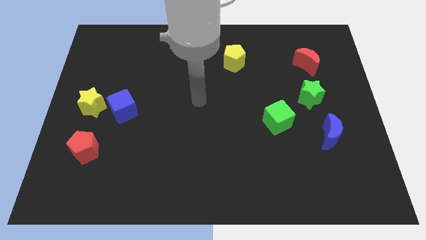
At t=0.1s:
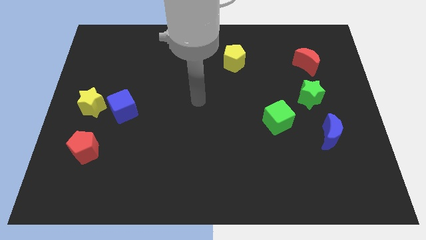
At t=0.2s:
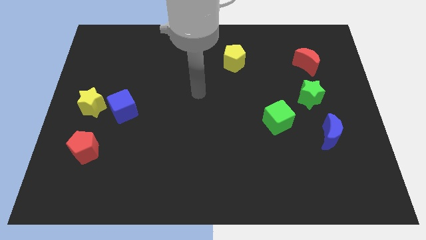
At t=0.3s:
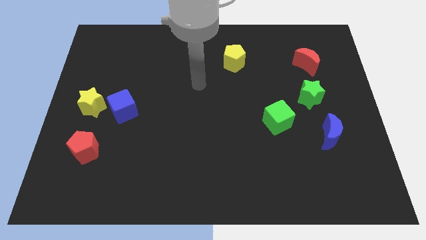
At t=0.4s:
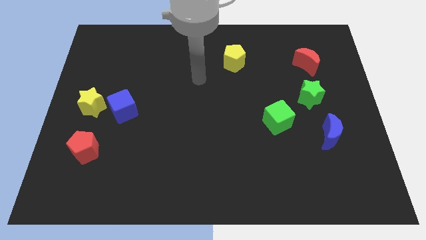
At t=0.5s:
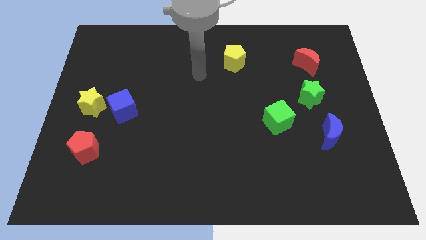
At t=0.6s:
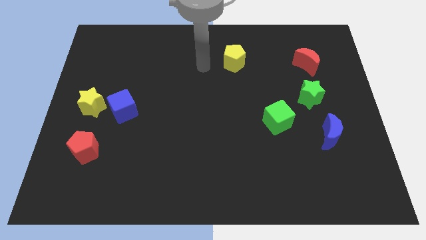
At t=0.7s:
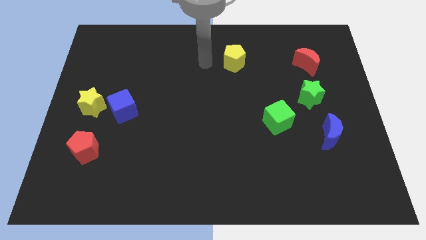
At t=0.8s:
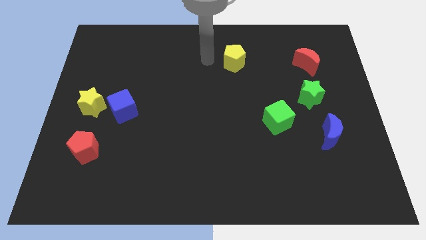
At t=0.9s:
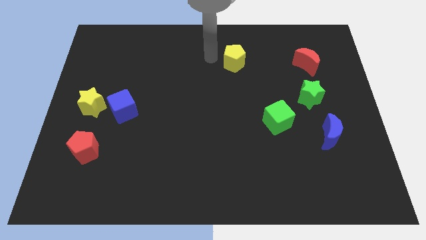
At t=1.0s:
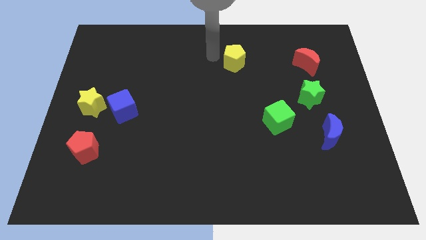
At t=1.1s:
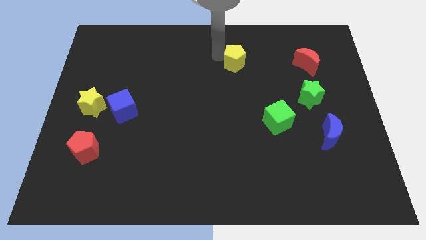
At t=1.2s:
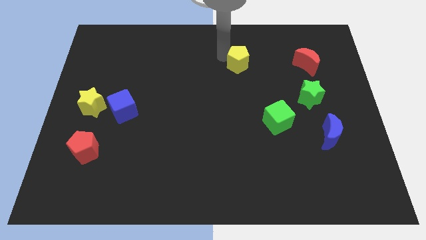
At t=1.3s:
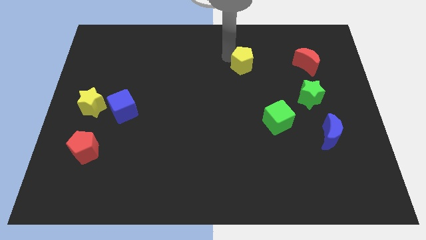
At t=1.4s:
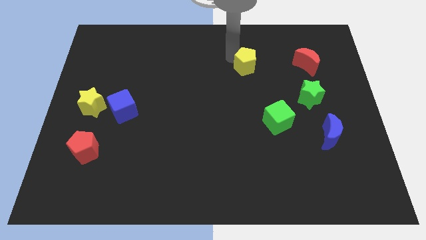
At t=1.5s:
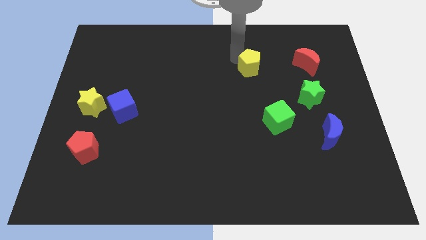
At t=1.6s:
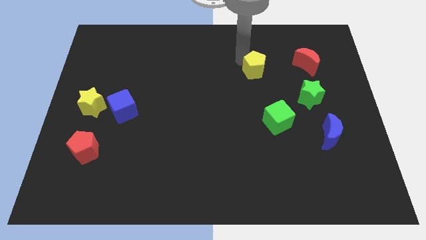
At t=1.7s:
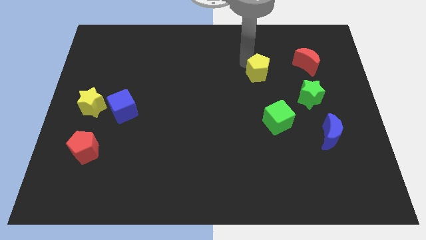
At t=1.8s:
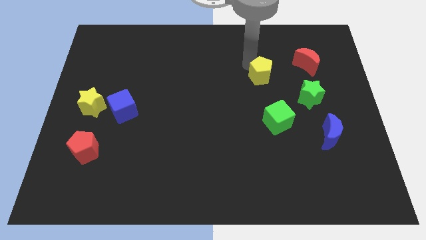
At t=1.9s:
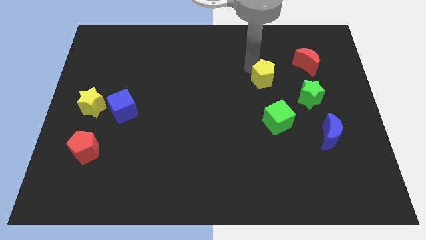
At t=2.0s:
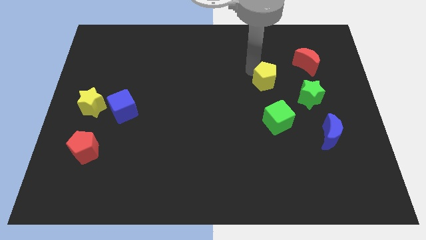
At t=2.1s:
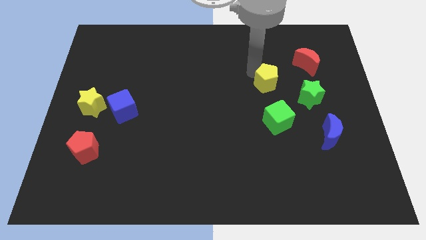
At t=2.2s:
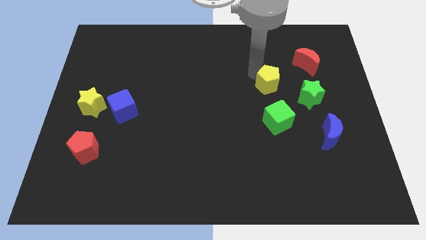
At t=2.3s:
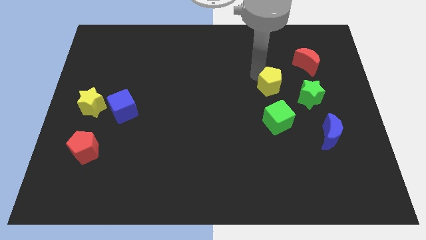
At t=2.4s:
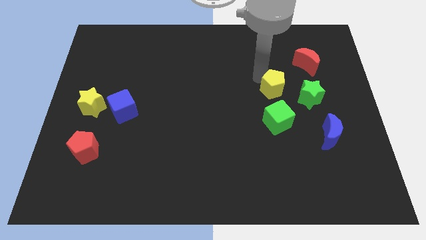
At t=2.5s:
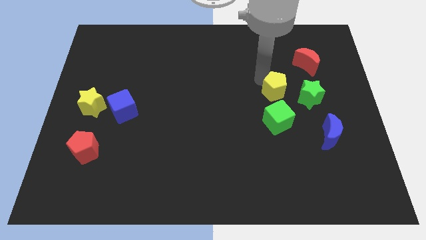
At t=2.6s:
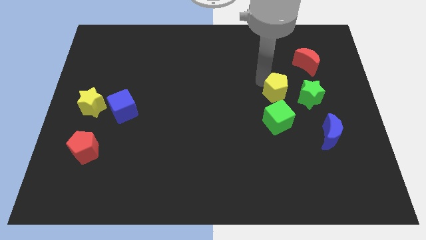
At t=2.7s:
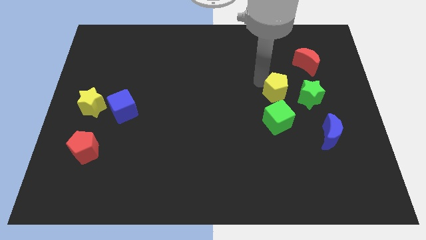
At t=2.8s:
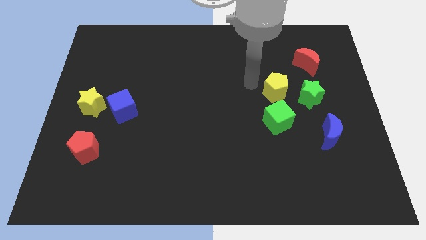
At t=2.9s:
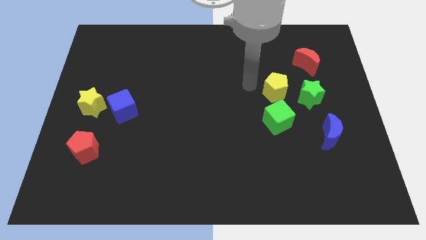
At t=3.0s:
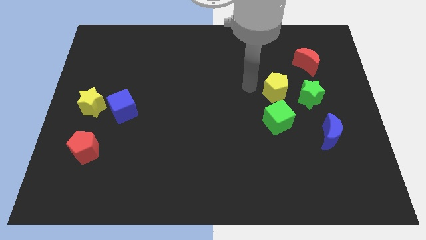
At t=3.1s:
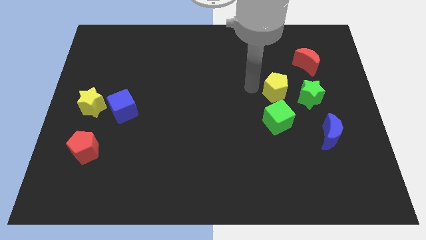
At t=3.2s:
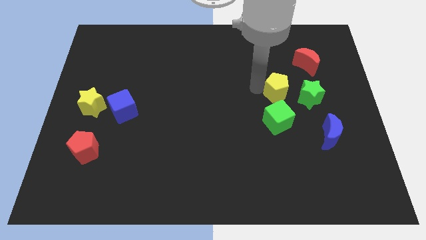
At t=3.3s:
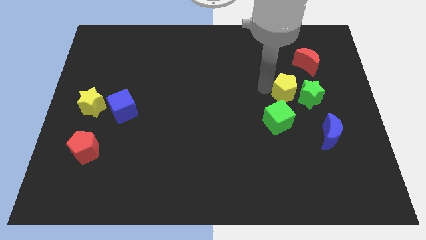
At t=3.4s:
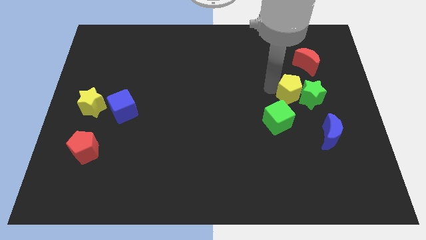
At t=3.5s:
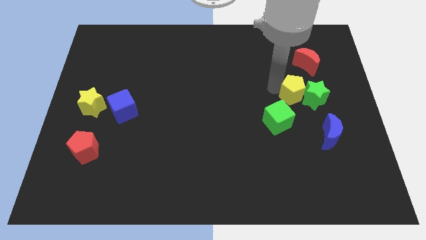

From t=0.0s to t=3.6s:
push the yellow pentagon close to the green star

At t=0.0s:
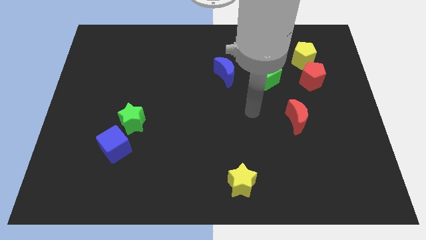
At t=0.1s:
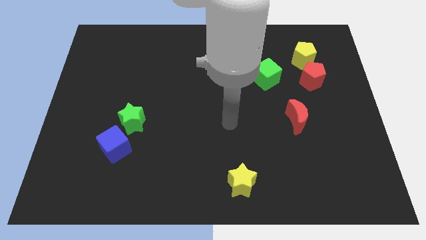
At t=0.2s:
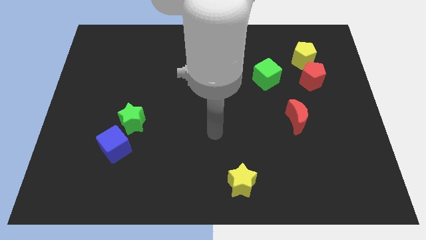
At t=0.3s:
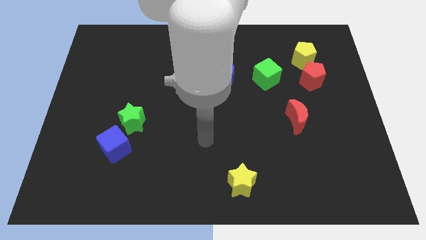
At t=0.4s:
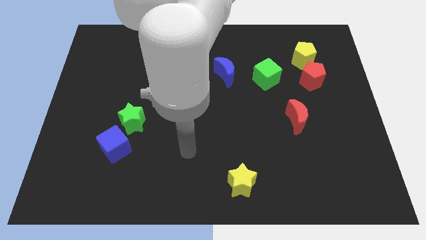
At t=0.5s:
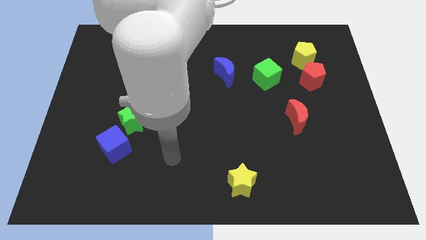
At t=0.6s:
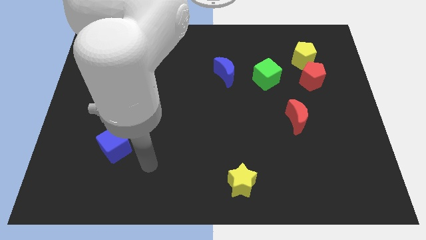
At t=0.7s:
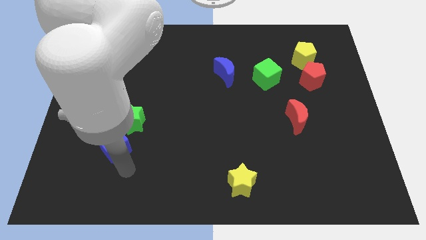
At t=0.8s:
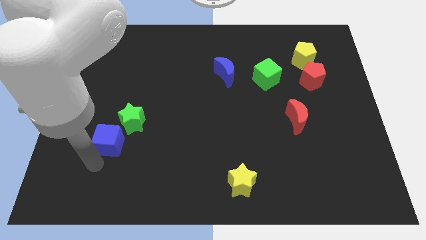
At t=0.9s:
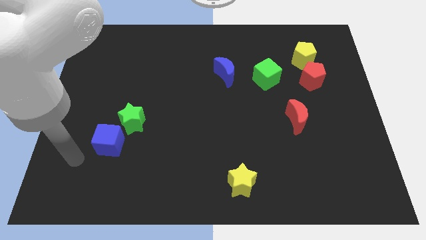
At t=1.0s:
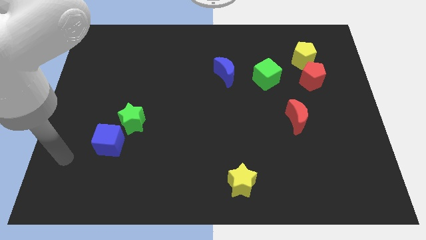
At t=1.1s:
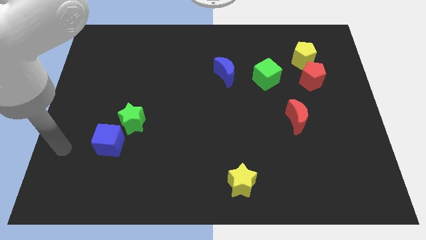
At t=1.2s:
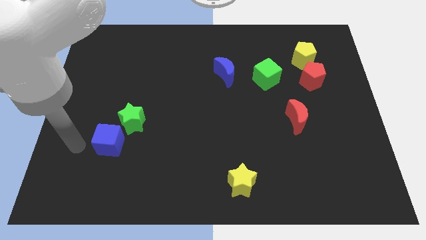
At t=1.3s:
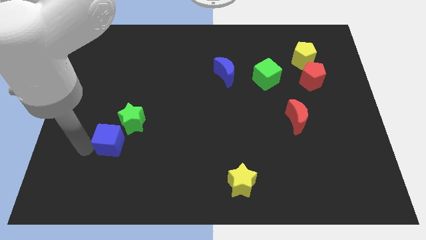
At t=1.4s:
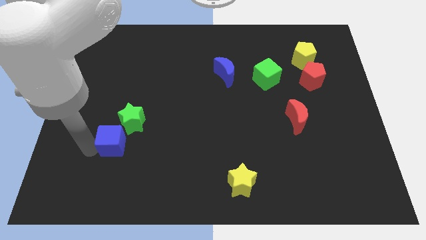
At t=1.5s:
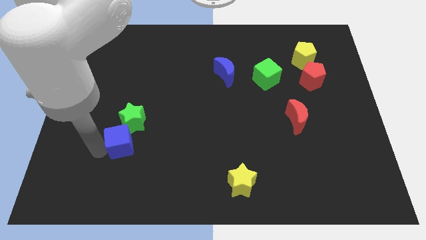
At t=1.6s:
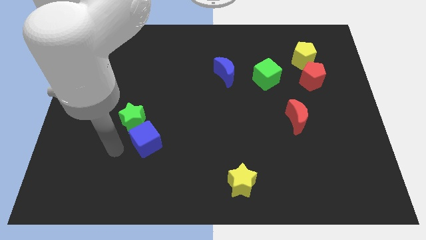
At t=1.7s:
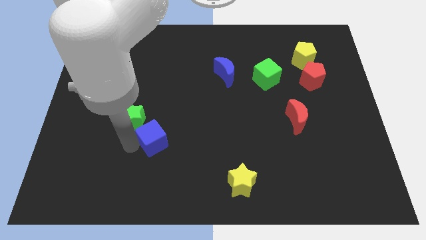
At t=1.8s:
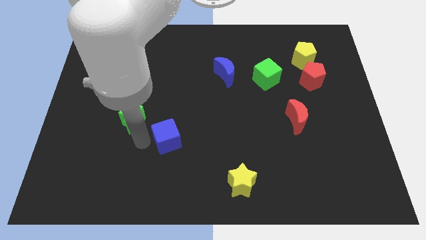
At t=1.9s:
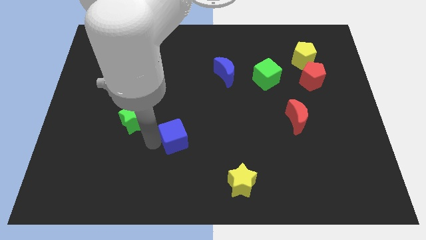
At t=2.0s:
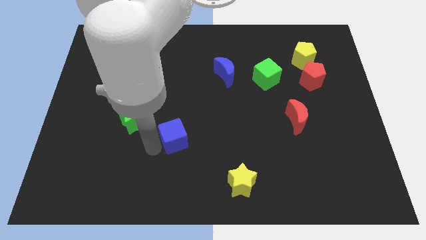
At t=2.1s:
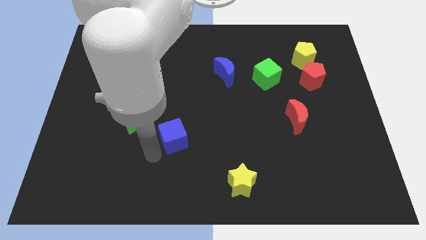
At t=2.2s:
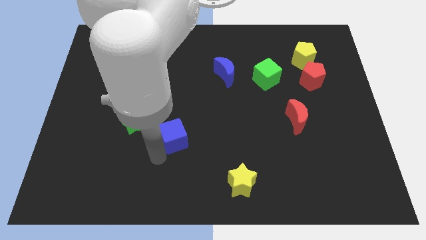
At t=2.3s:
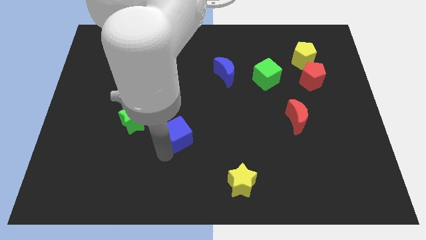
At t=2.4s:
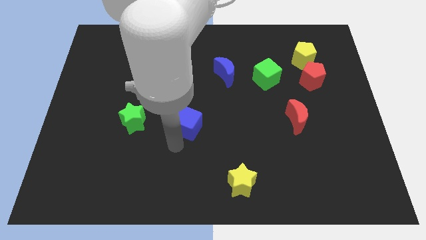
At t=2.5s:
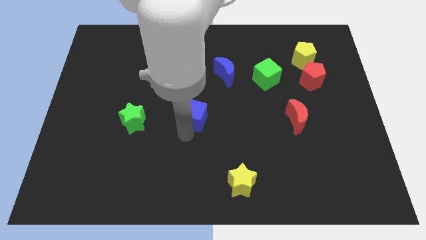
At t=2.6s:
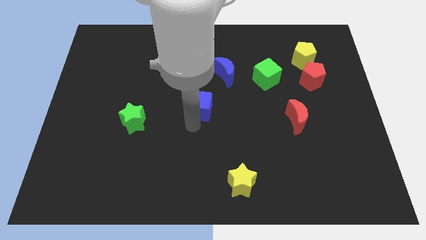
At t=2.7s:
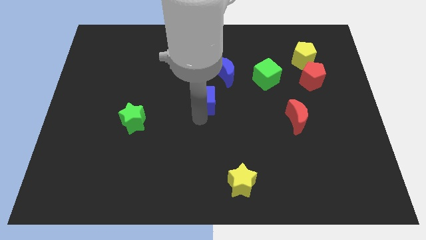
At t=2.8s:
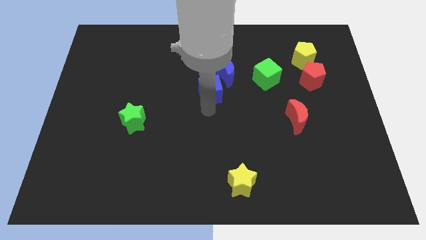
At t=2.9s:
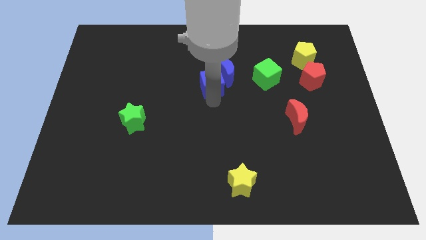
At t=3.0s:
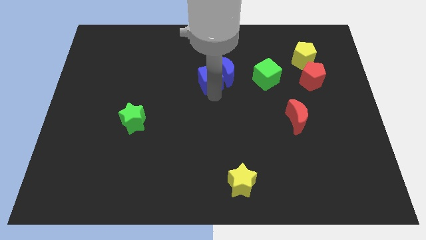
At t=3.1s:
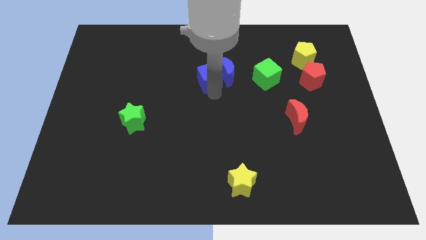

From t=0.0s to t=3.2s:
slide the blue cube to the blue moon

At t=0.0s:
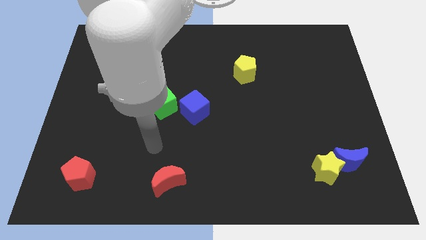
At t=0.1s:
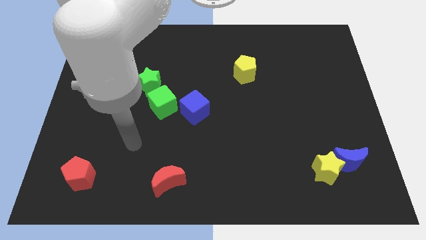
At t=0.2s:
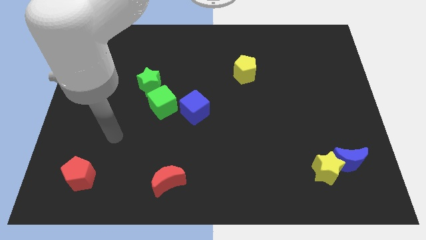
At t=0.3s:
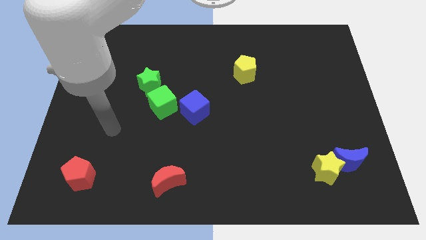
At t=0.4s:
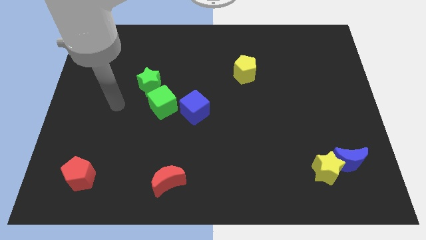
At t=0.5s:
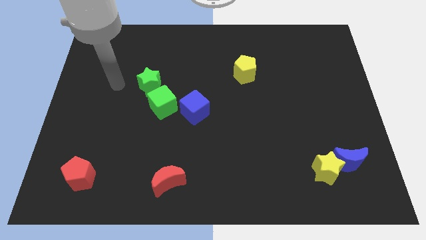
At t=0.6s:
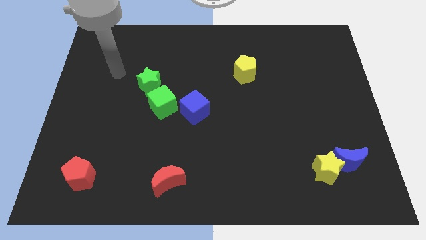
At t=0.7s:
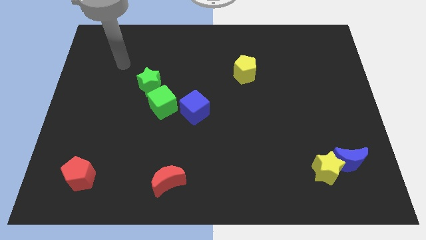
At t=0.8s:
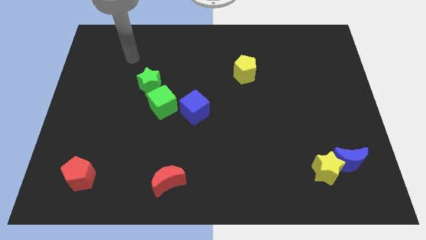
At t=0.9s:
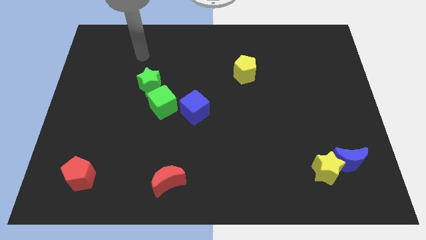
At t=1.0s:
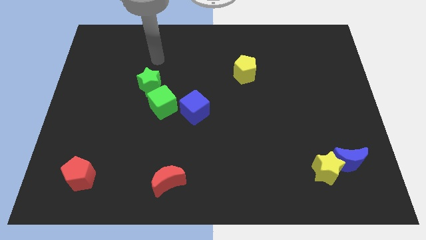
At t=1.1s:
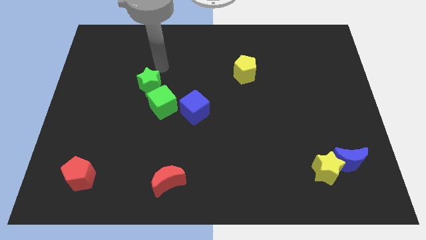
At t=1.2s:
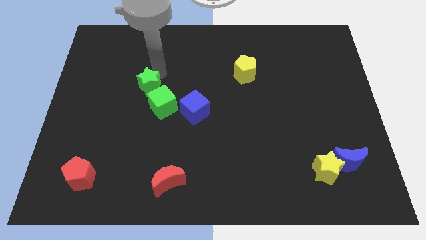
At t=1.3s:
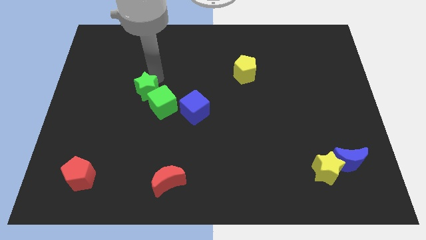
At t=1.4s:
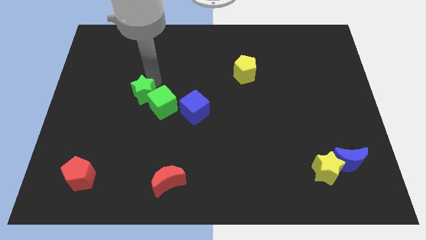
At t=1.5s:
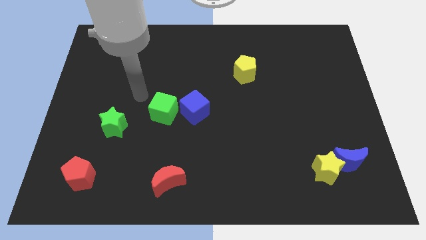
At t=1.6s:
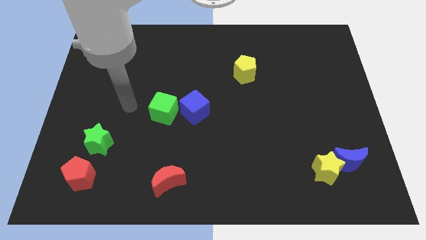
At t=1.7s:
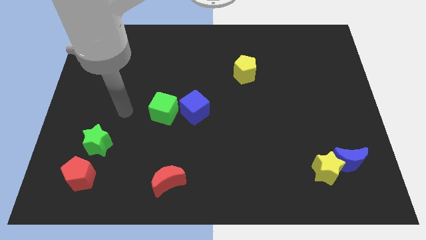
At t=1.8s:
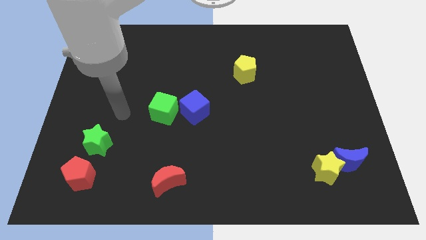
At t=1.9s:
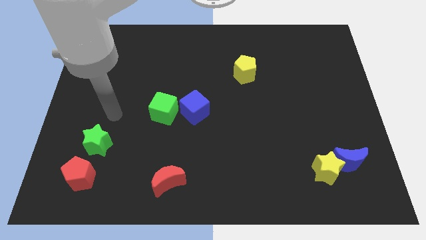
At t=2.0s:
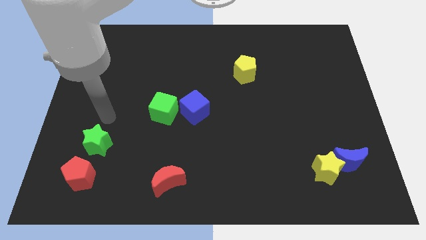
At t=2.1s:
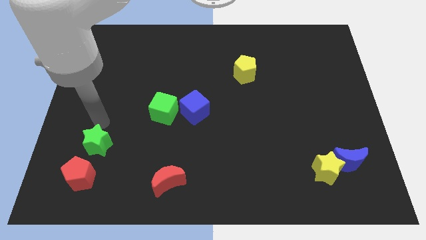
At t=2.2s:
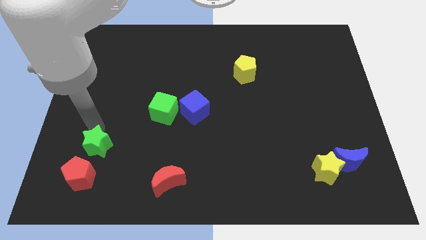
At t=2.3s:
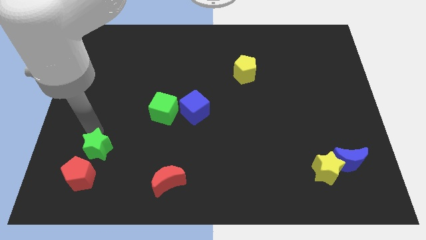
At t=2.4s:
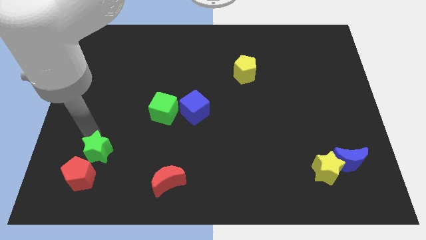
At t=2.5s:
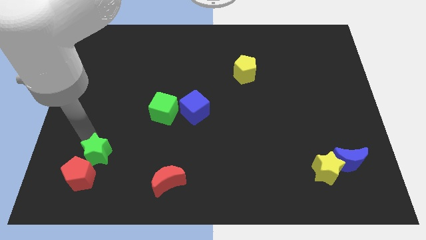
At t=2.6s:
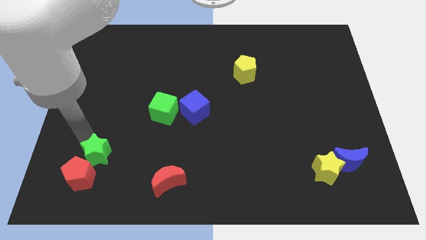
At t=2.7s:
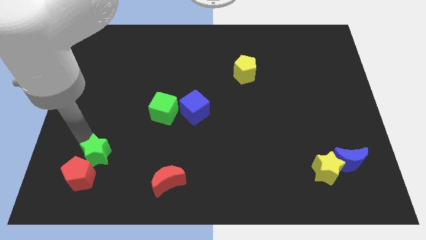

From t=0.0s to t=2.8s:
push the green star next to the red pentagon
